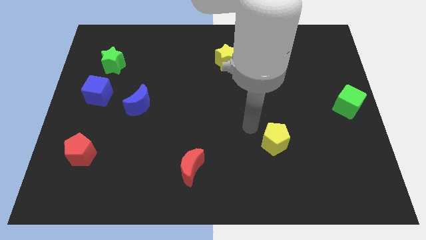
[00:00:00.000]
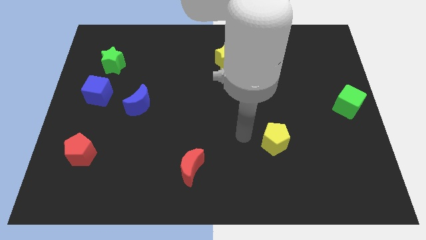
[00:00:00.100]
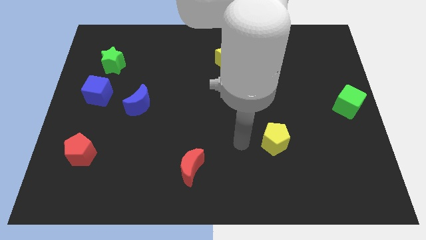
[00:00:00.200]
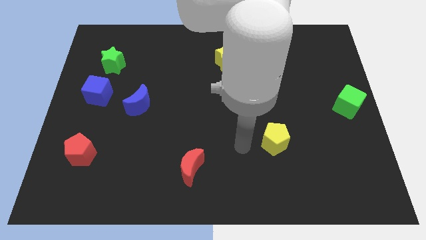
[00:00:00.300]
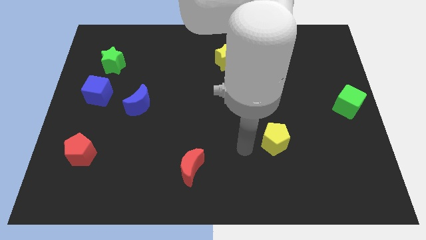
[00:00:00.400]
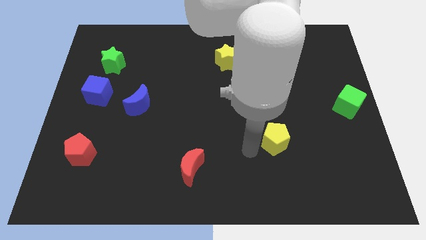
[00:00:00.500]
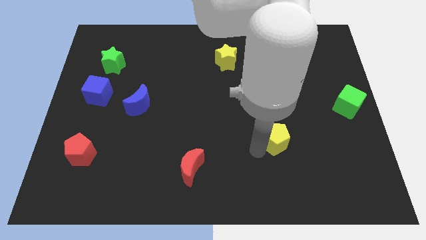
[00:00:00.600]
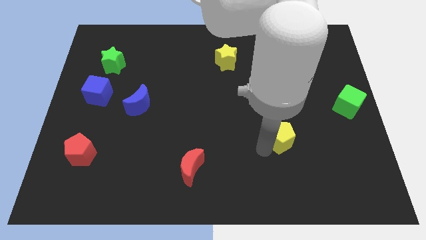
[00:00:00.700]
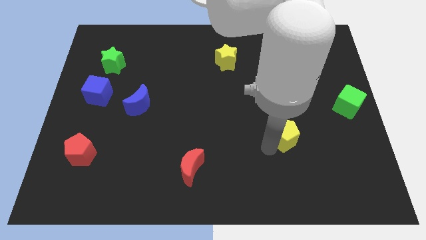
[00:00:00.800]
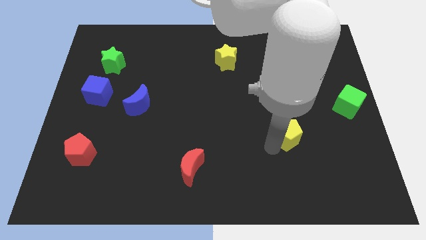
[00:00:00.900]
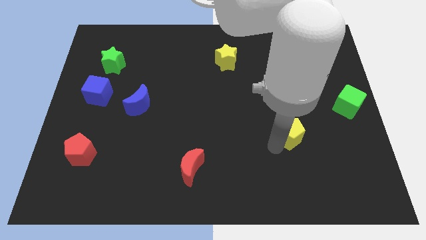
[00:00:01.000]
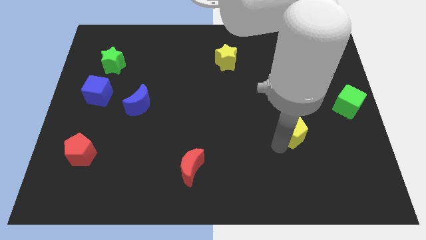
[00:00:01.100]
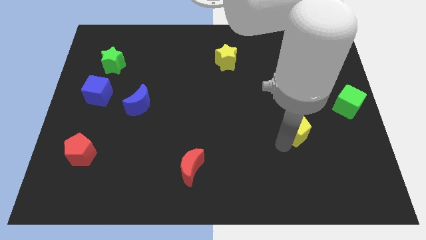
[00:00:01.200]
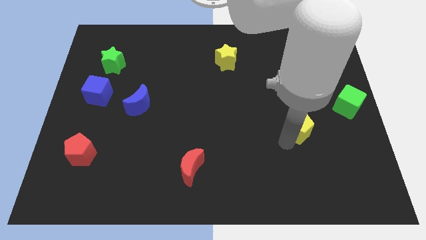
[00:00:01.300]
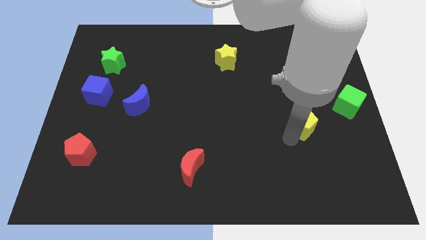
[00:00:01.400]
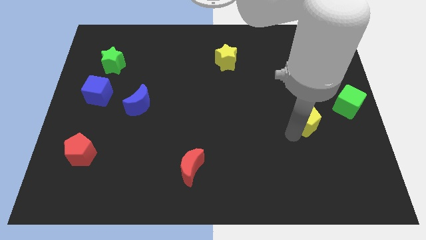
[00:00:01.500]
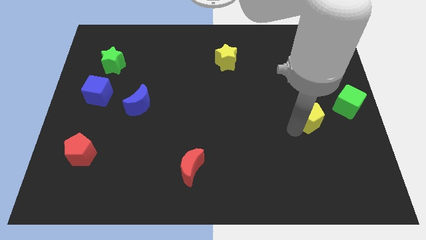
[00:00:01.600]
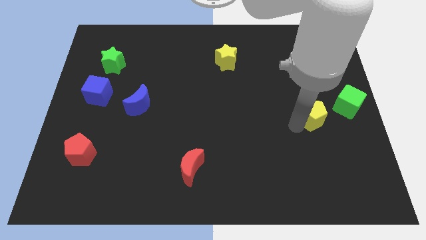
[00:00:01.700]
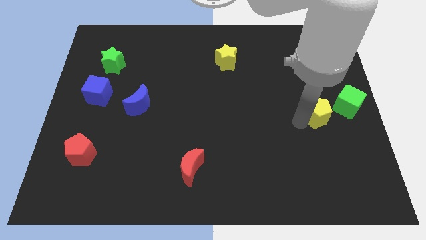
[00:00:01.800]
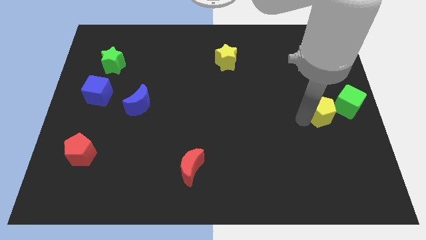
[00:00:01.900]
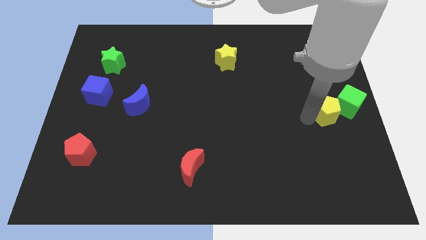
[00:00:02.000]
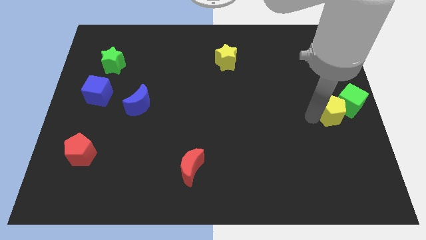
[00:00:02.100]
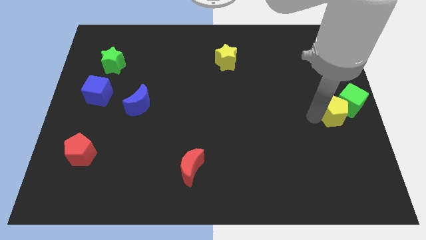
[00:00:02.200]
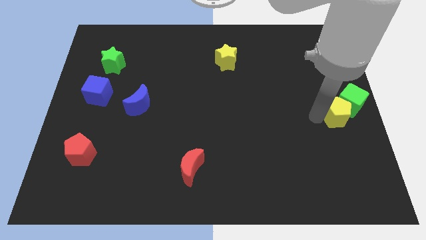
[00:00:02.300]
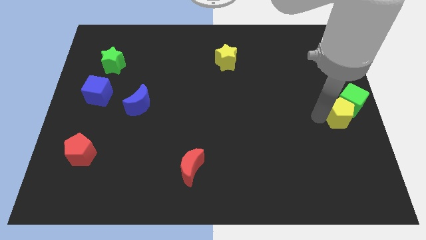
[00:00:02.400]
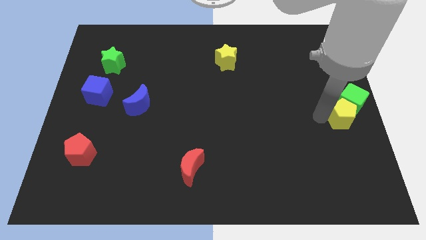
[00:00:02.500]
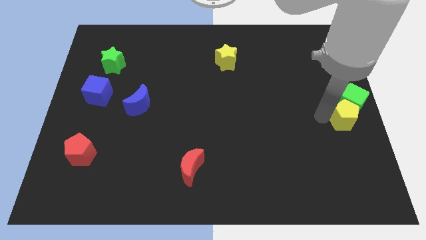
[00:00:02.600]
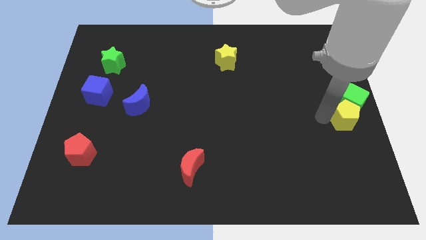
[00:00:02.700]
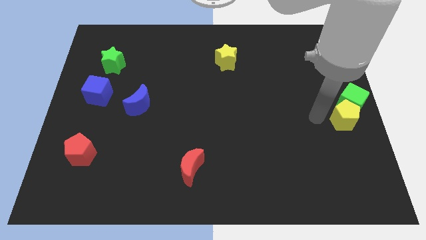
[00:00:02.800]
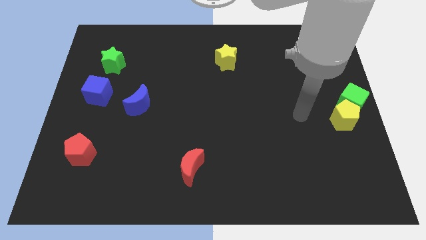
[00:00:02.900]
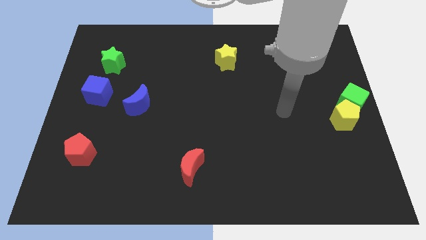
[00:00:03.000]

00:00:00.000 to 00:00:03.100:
move the yellow pentagon into the green cube

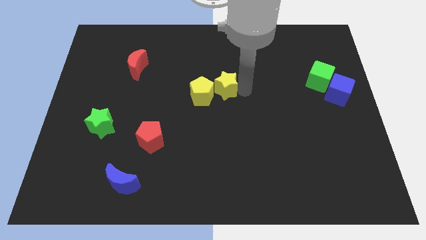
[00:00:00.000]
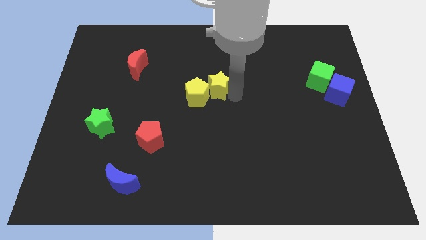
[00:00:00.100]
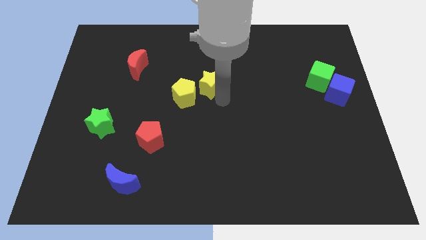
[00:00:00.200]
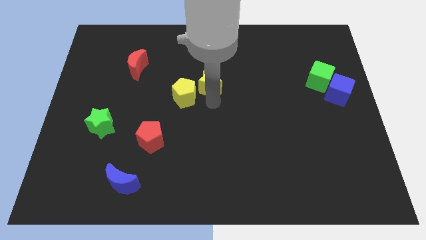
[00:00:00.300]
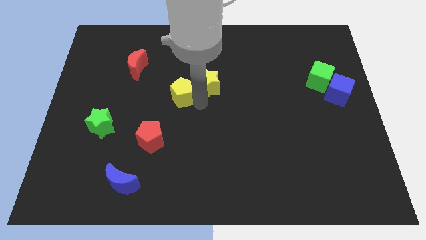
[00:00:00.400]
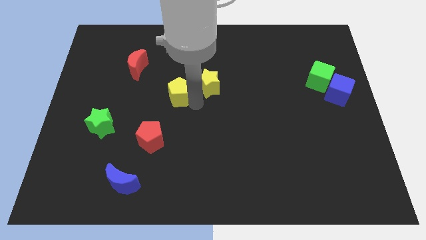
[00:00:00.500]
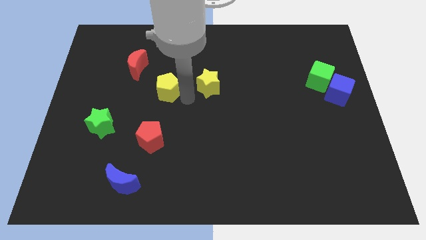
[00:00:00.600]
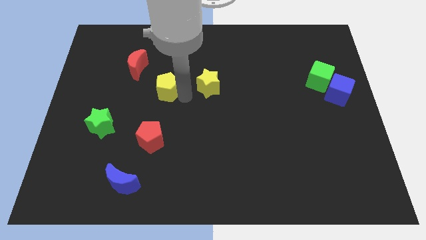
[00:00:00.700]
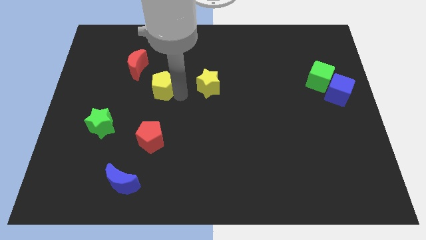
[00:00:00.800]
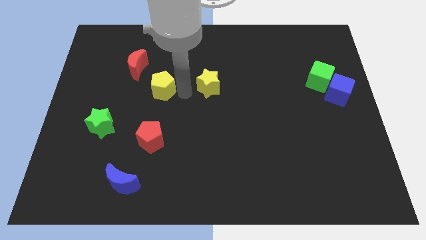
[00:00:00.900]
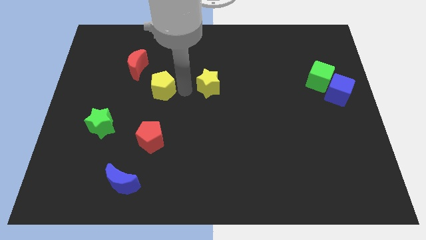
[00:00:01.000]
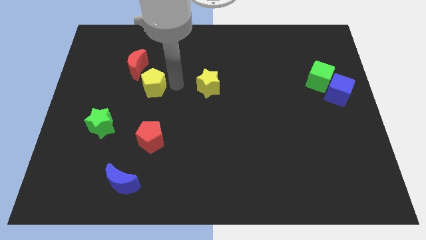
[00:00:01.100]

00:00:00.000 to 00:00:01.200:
separate yellow objects

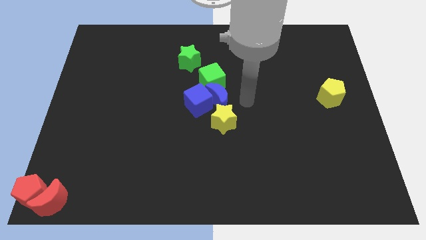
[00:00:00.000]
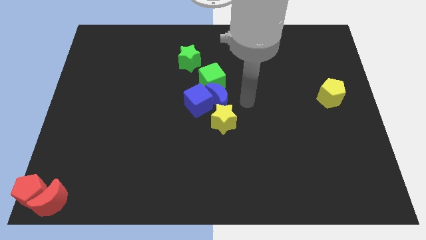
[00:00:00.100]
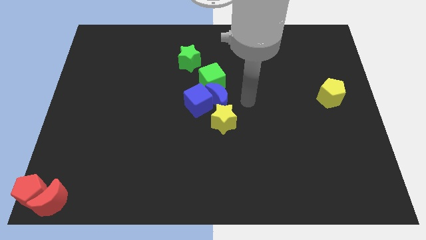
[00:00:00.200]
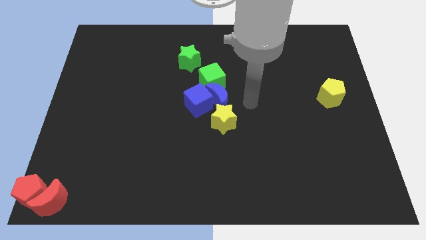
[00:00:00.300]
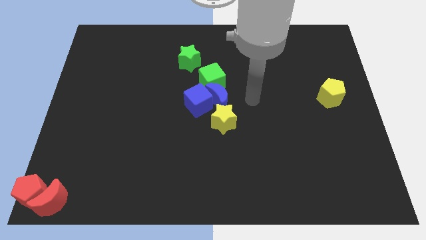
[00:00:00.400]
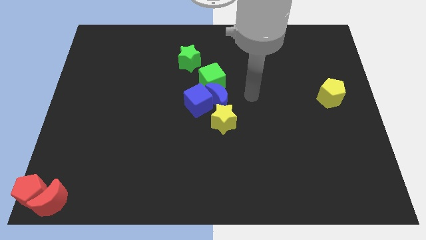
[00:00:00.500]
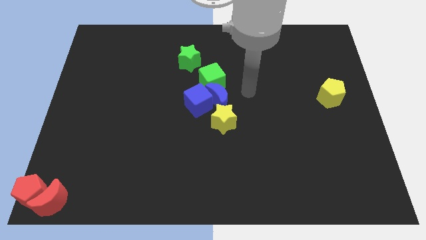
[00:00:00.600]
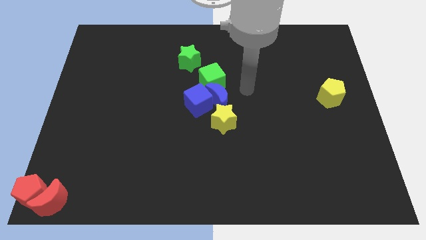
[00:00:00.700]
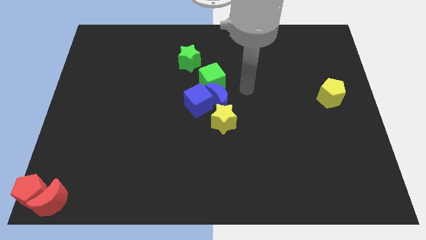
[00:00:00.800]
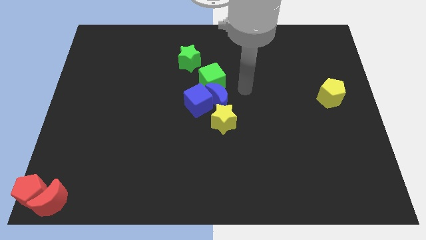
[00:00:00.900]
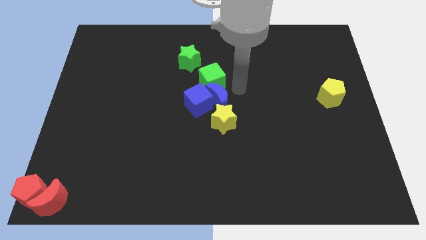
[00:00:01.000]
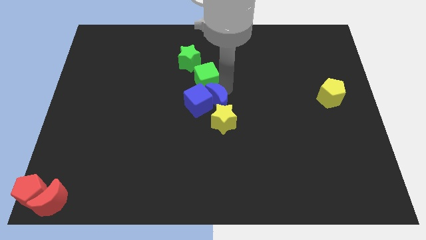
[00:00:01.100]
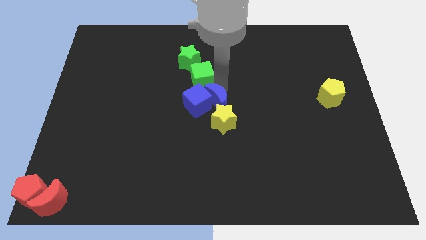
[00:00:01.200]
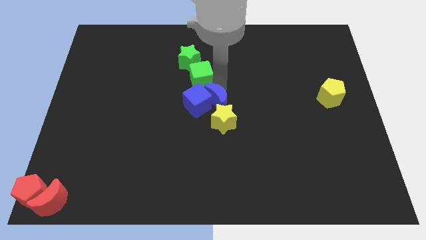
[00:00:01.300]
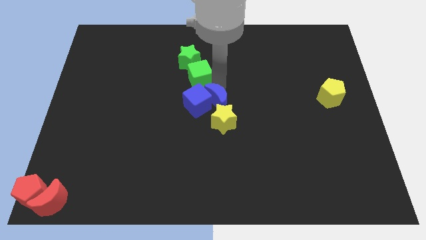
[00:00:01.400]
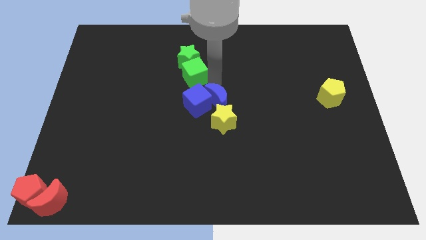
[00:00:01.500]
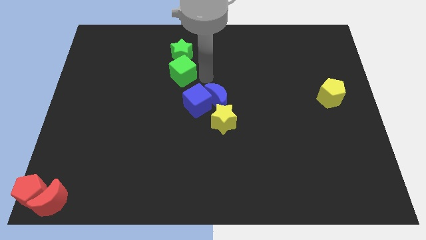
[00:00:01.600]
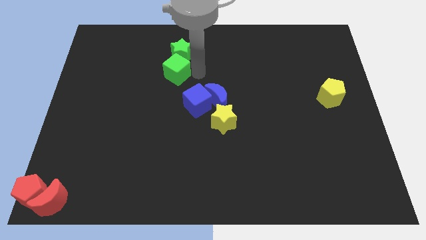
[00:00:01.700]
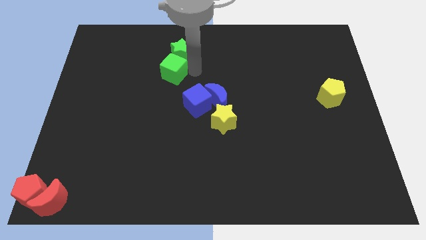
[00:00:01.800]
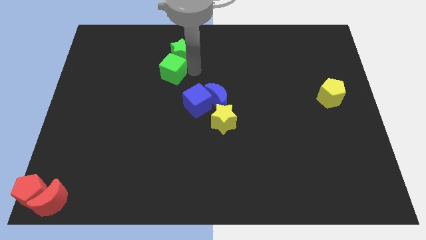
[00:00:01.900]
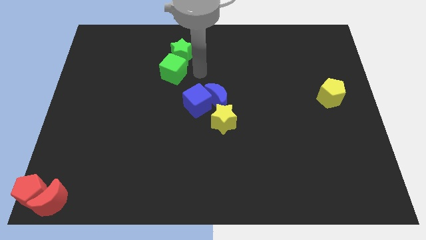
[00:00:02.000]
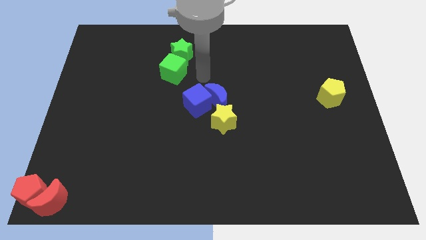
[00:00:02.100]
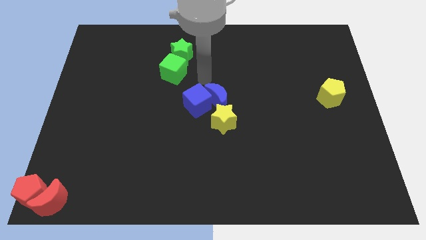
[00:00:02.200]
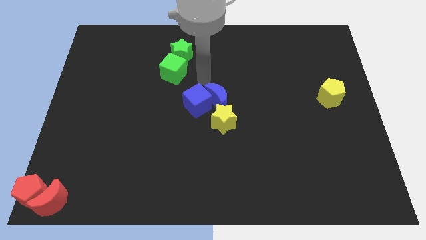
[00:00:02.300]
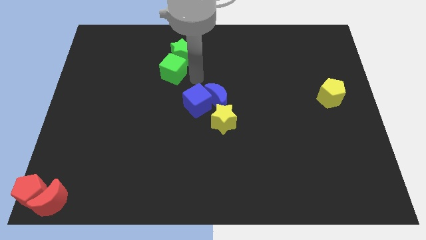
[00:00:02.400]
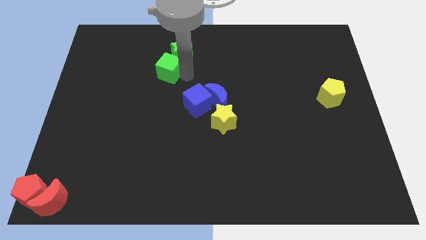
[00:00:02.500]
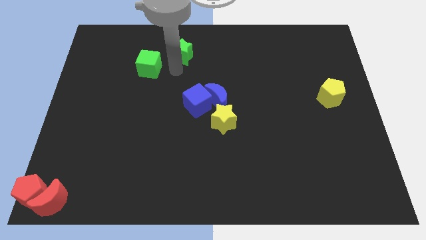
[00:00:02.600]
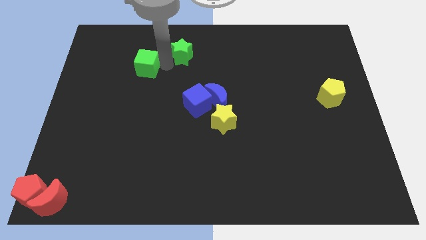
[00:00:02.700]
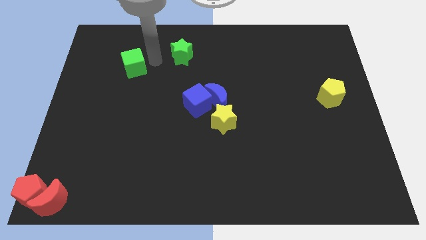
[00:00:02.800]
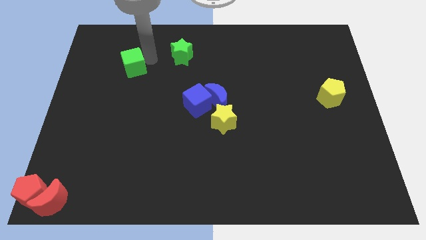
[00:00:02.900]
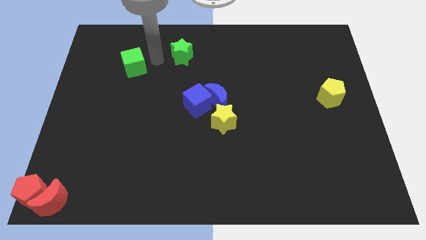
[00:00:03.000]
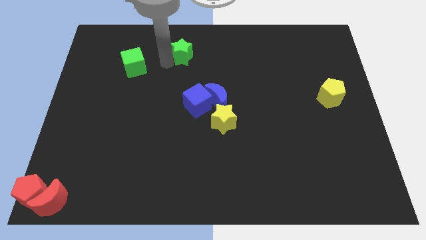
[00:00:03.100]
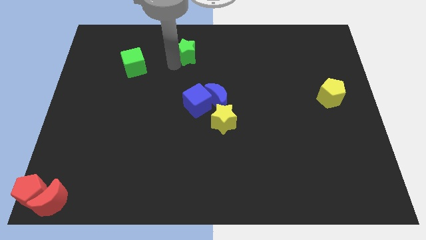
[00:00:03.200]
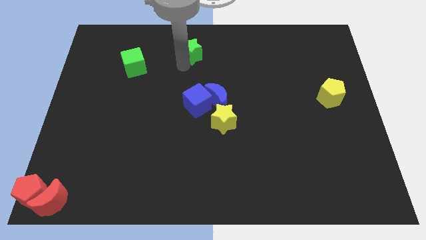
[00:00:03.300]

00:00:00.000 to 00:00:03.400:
separate the green cube from green star

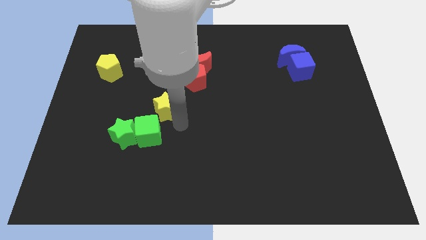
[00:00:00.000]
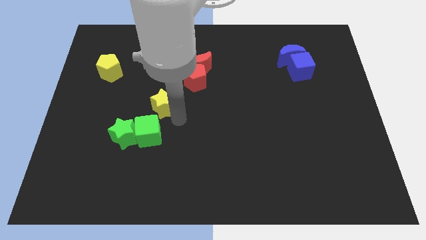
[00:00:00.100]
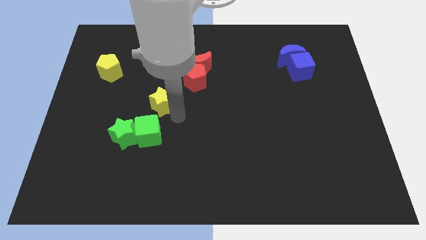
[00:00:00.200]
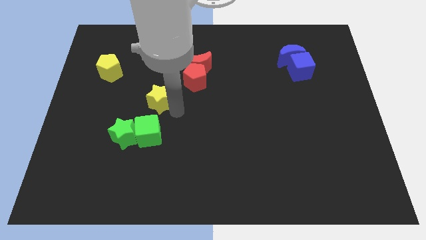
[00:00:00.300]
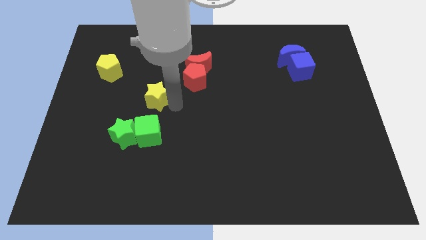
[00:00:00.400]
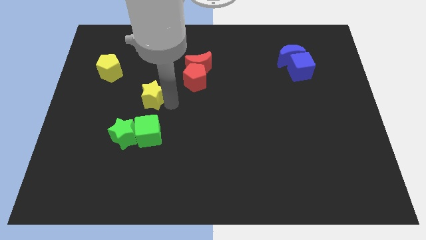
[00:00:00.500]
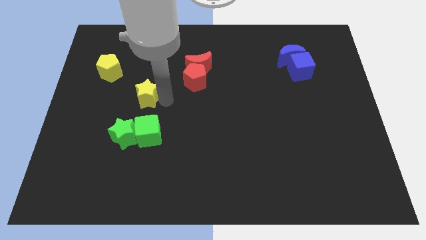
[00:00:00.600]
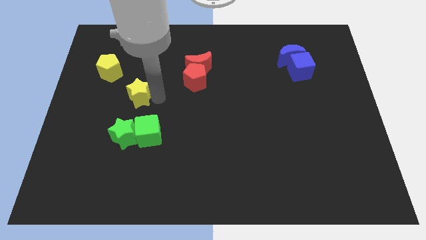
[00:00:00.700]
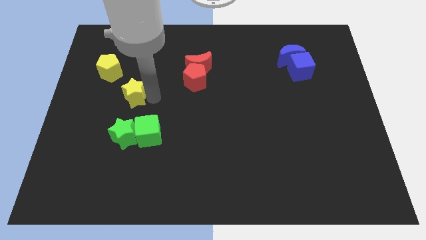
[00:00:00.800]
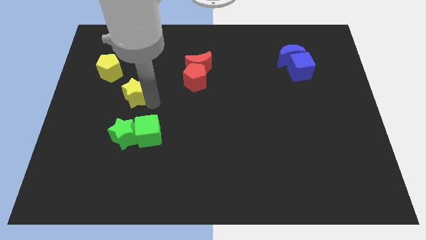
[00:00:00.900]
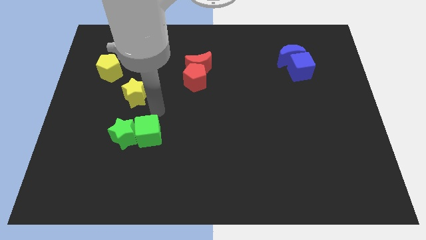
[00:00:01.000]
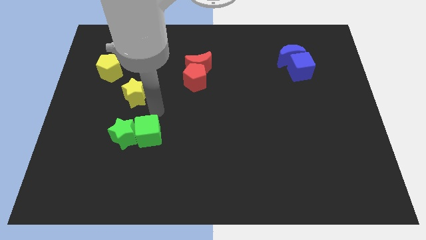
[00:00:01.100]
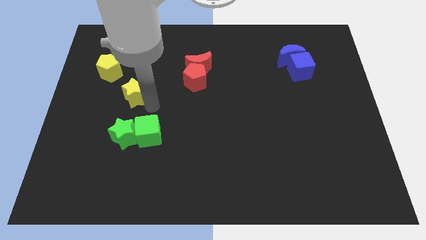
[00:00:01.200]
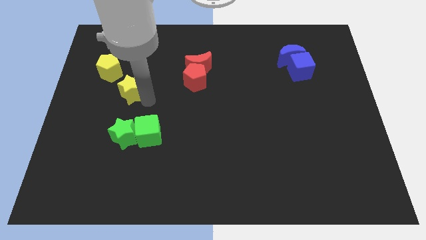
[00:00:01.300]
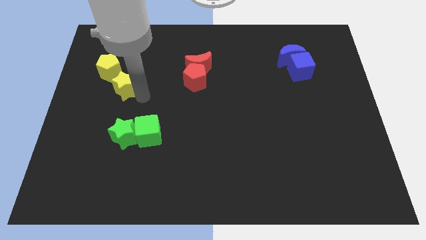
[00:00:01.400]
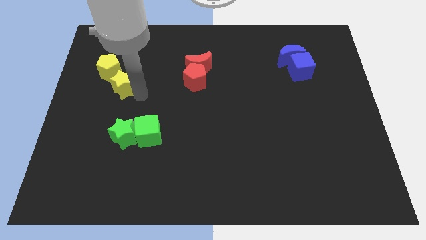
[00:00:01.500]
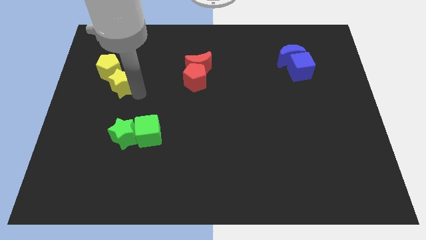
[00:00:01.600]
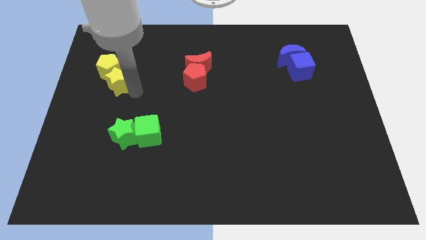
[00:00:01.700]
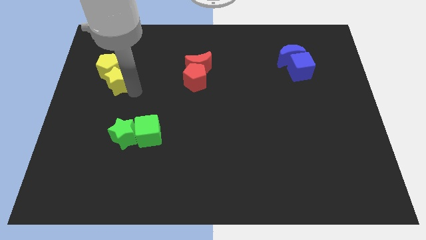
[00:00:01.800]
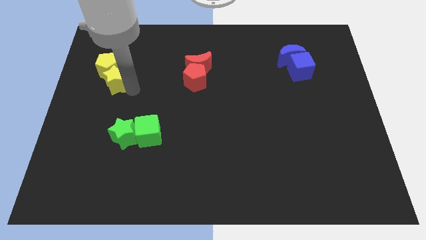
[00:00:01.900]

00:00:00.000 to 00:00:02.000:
move the yellow star into the yellow pentagon
